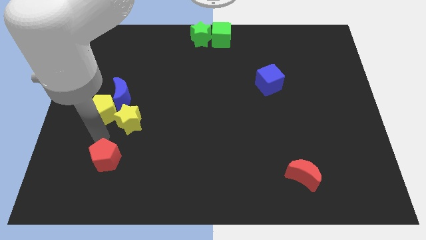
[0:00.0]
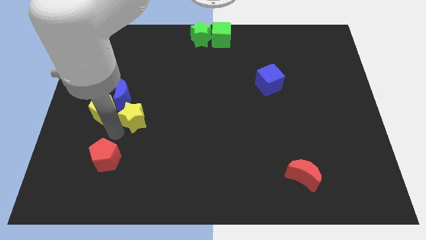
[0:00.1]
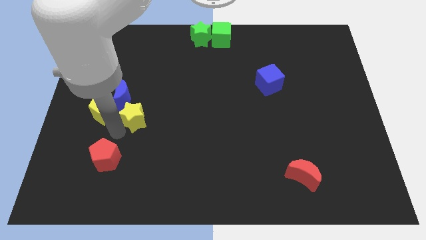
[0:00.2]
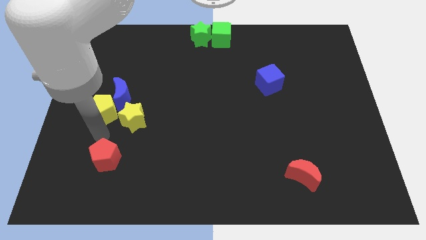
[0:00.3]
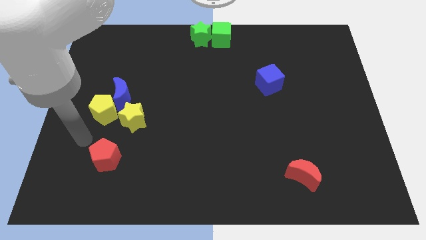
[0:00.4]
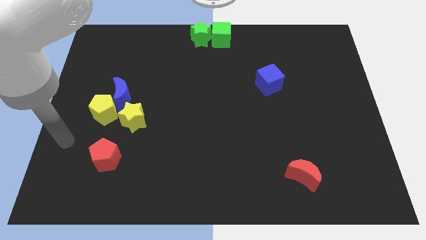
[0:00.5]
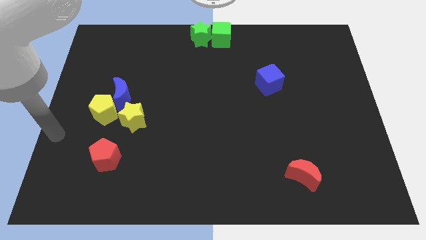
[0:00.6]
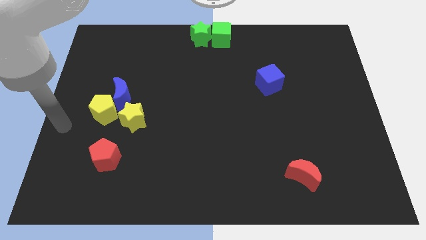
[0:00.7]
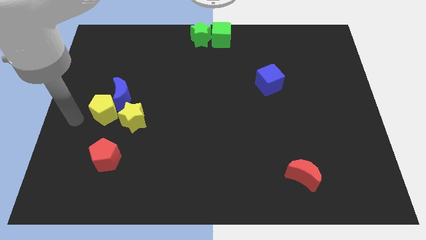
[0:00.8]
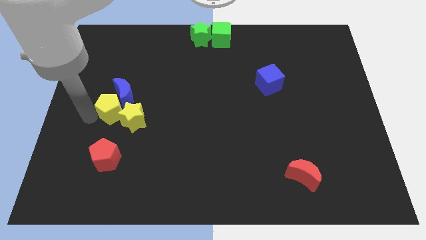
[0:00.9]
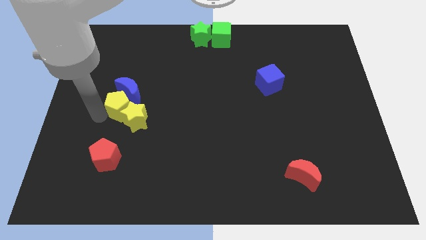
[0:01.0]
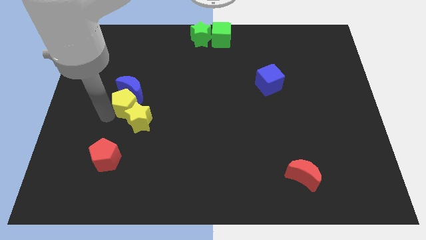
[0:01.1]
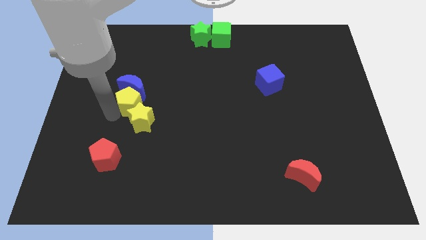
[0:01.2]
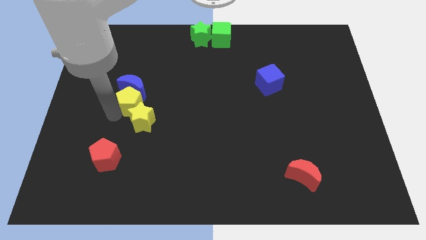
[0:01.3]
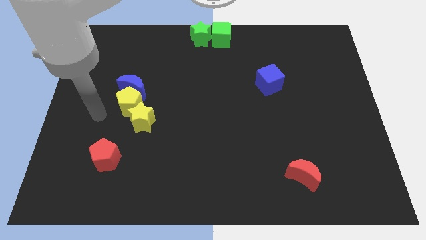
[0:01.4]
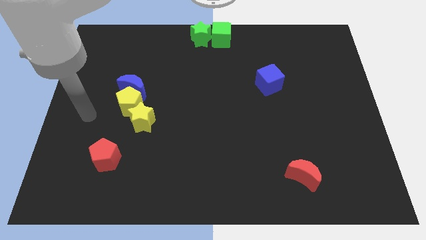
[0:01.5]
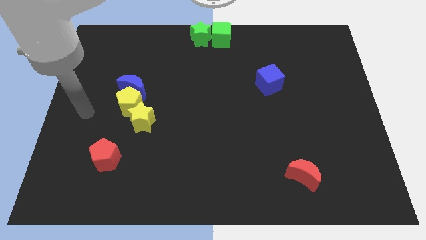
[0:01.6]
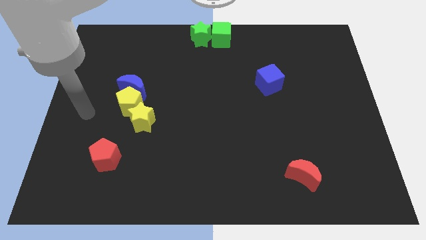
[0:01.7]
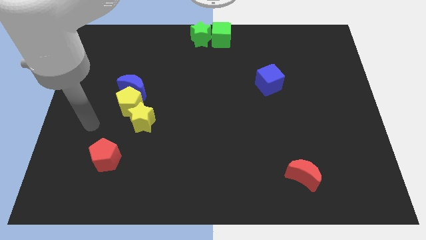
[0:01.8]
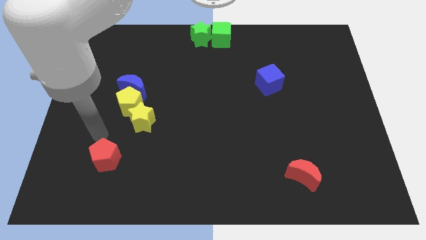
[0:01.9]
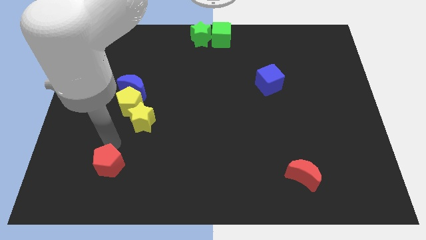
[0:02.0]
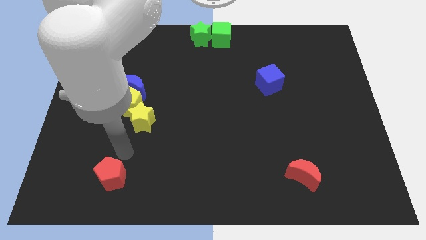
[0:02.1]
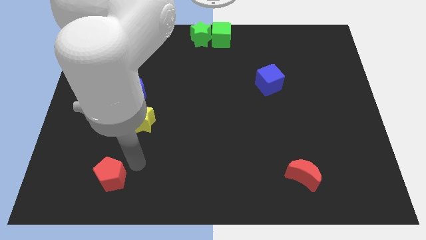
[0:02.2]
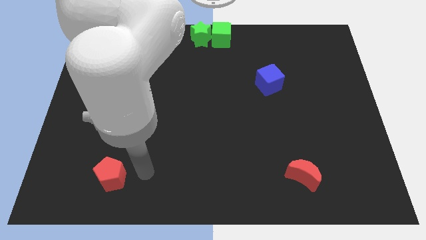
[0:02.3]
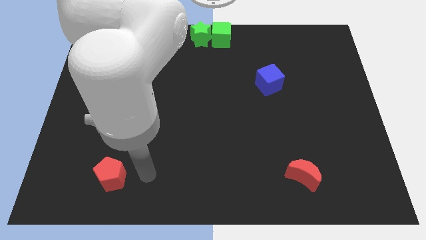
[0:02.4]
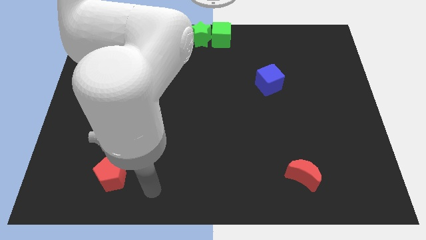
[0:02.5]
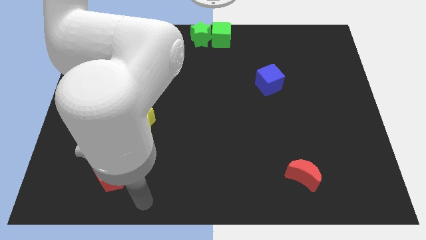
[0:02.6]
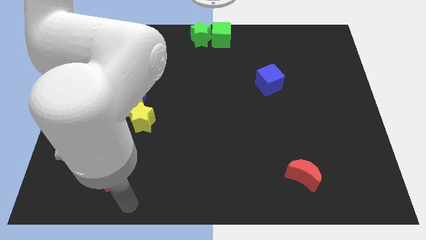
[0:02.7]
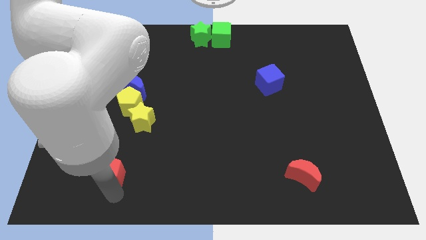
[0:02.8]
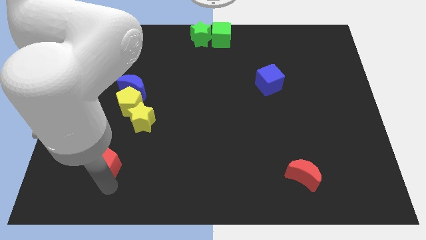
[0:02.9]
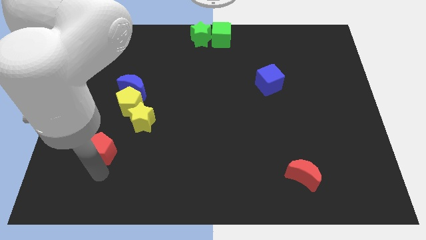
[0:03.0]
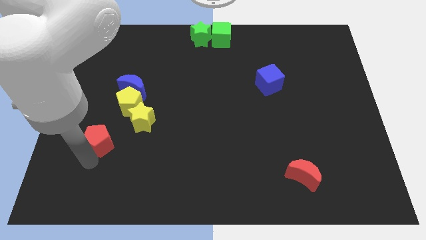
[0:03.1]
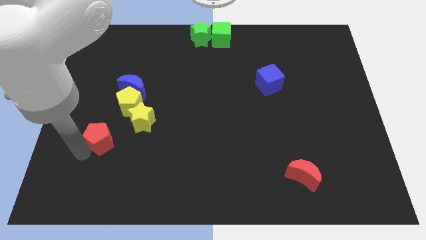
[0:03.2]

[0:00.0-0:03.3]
push the yellow pentagon into the blue moon and yellow star

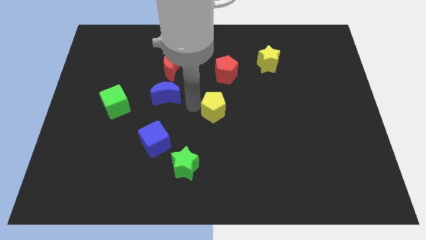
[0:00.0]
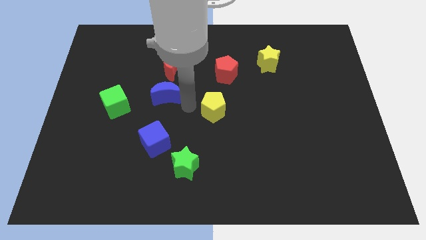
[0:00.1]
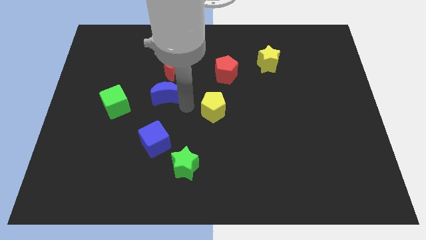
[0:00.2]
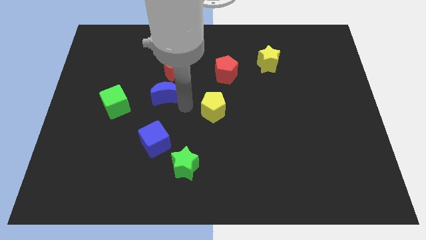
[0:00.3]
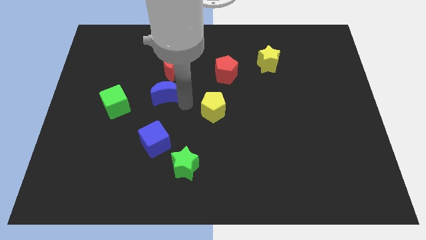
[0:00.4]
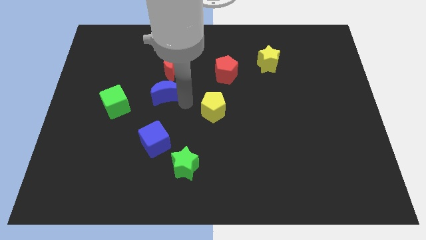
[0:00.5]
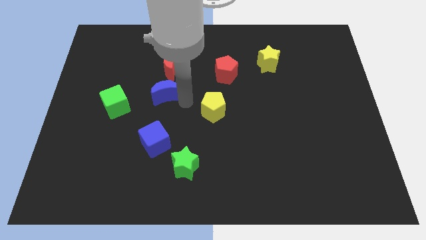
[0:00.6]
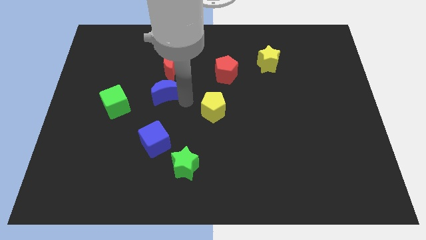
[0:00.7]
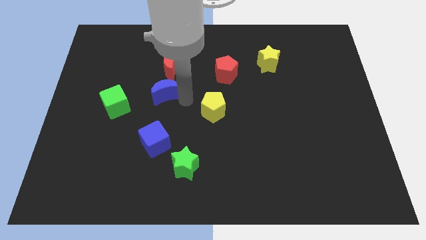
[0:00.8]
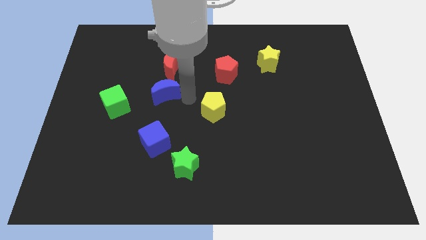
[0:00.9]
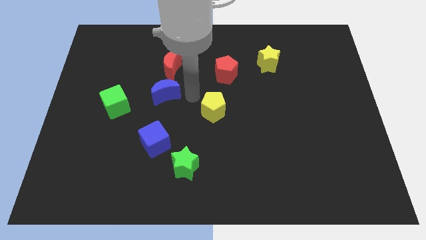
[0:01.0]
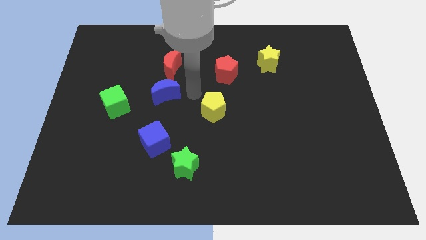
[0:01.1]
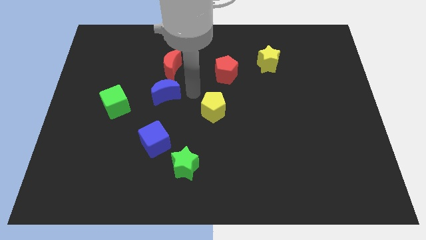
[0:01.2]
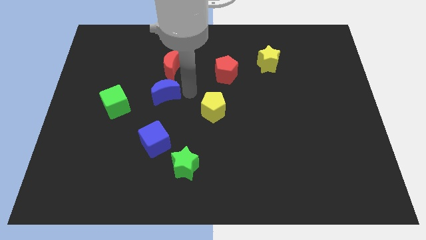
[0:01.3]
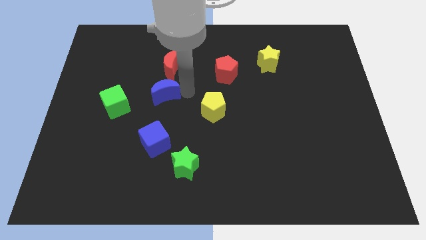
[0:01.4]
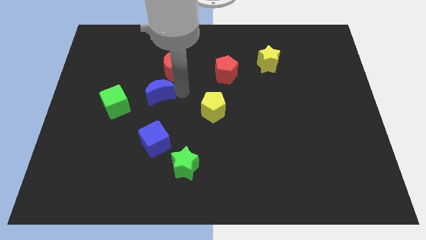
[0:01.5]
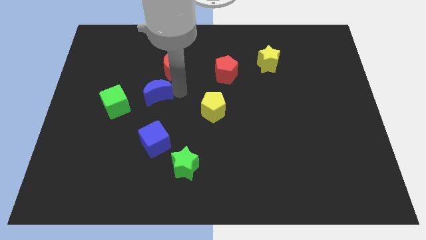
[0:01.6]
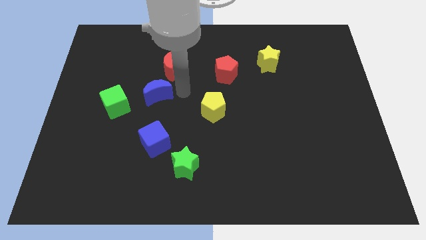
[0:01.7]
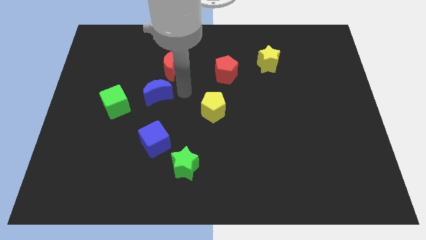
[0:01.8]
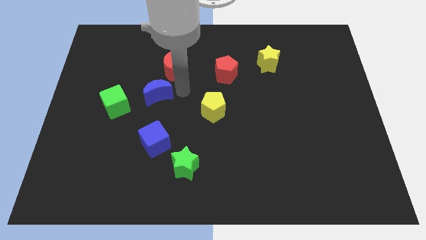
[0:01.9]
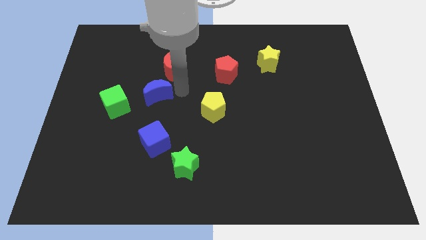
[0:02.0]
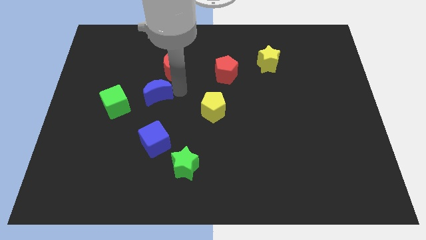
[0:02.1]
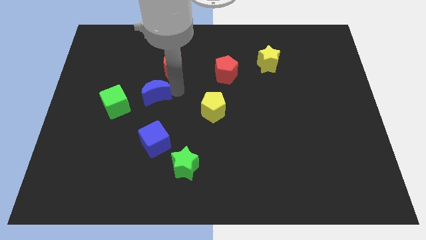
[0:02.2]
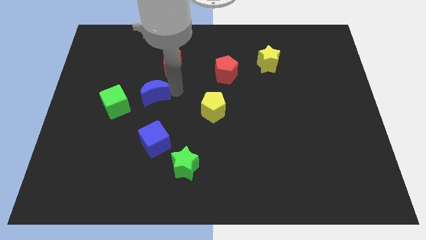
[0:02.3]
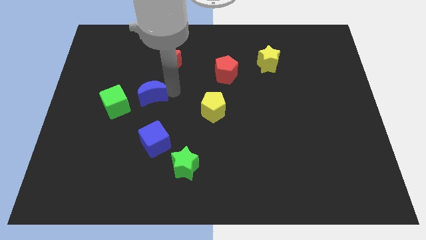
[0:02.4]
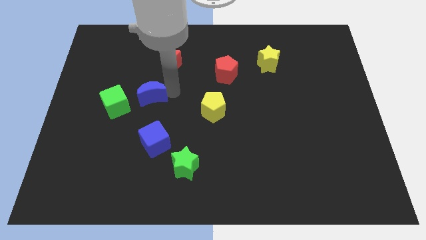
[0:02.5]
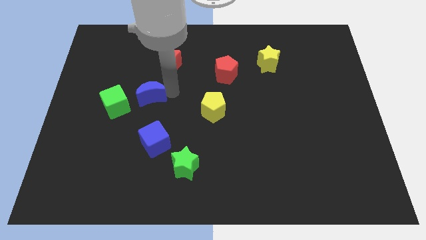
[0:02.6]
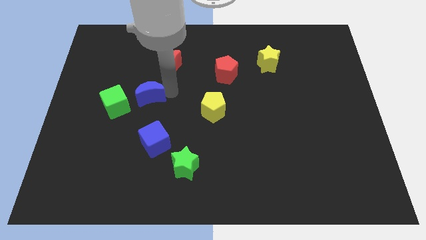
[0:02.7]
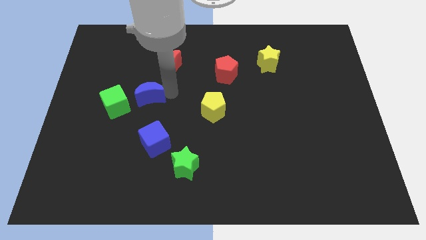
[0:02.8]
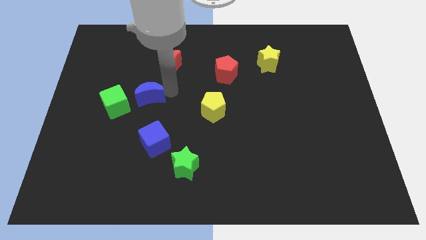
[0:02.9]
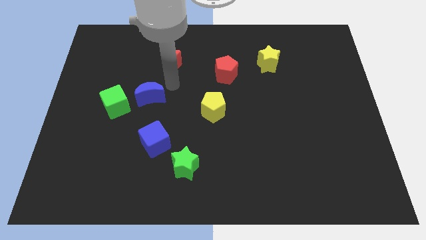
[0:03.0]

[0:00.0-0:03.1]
move the blue moon to the right of the green cube

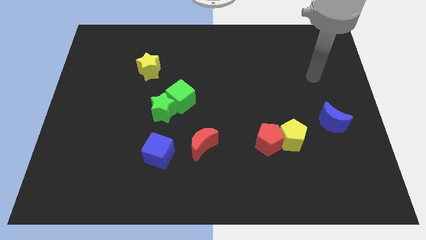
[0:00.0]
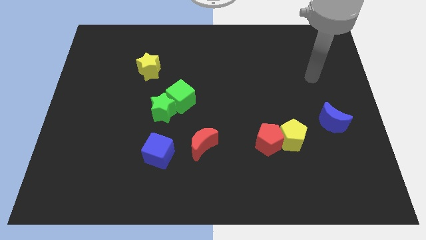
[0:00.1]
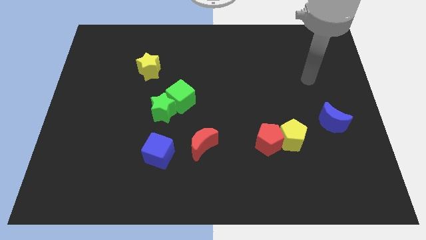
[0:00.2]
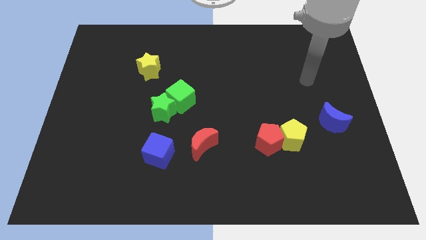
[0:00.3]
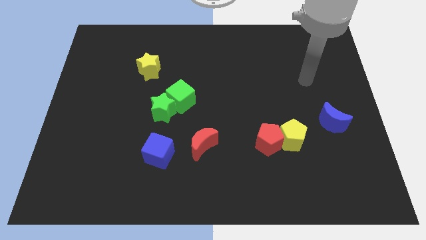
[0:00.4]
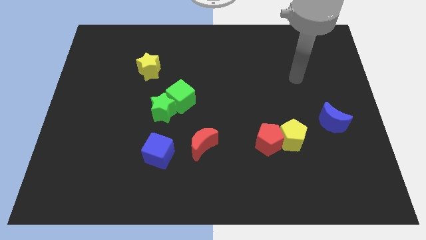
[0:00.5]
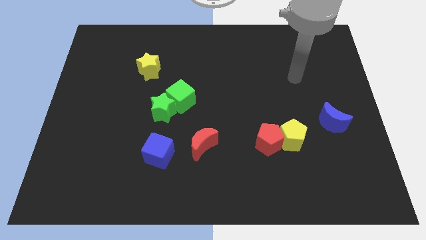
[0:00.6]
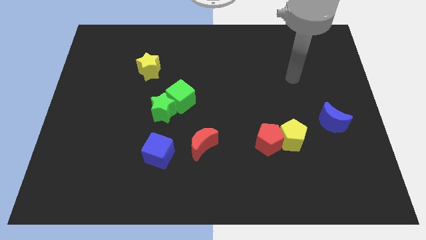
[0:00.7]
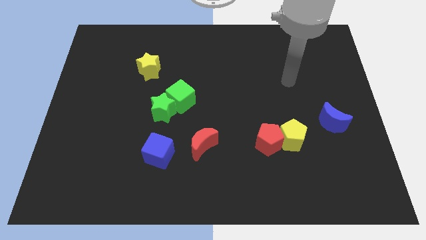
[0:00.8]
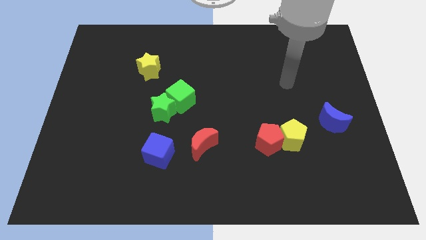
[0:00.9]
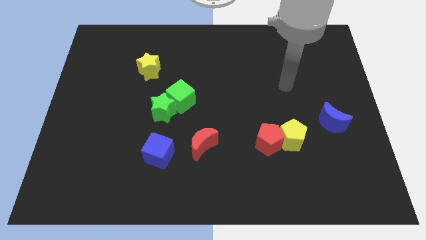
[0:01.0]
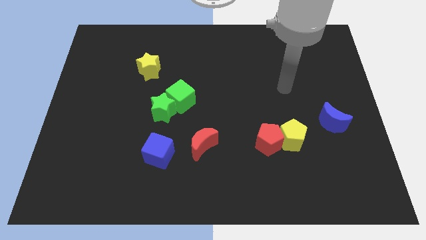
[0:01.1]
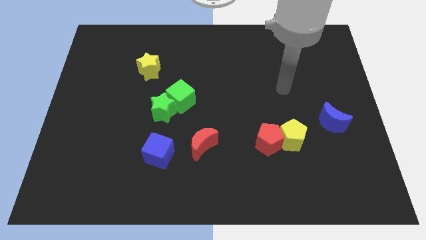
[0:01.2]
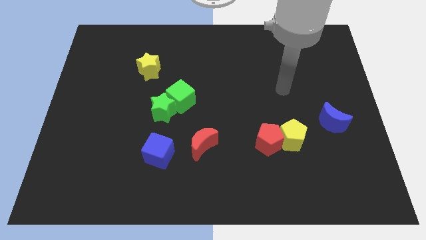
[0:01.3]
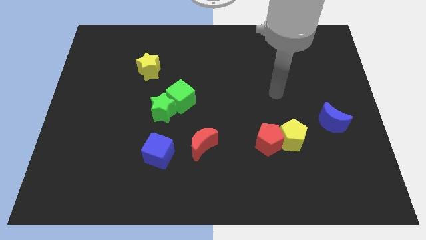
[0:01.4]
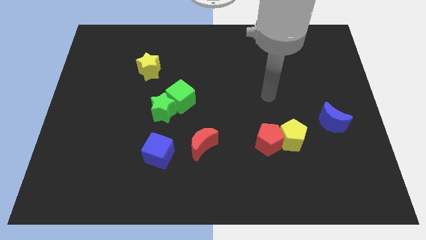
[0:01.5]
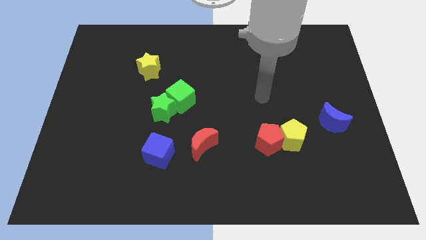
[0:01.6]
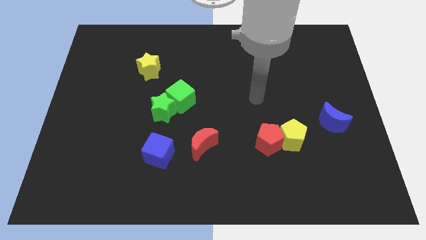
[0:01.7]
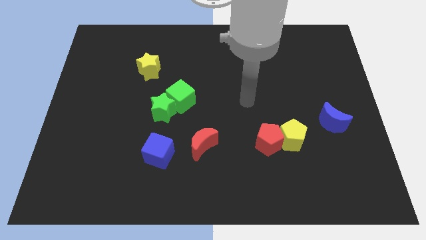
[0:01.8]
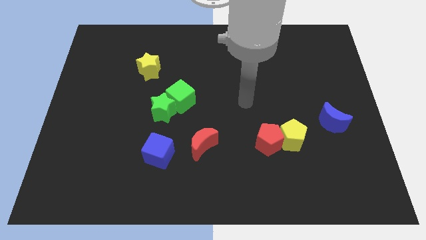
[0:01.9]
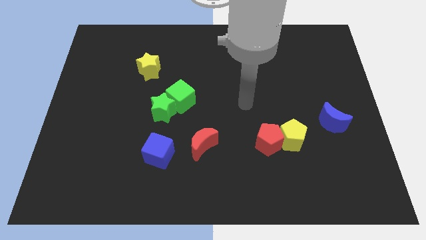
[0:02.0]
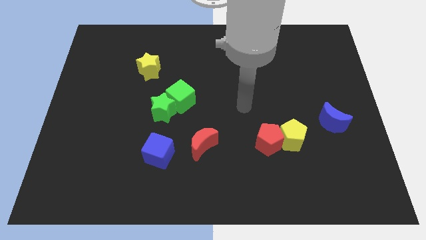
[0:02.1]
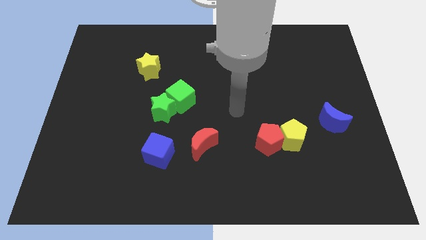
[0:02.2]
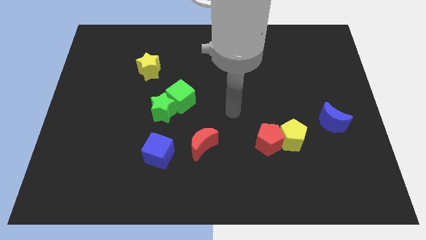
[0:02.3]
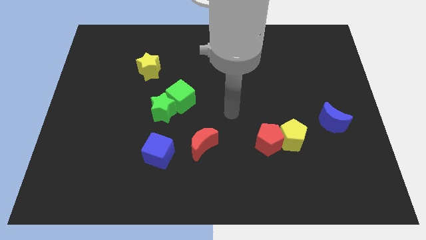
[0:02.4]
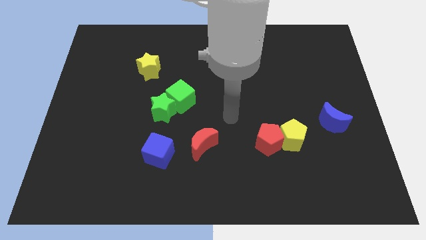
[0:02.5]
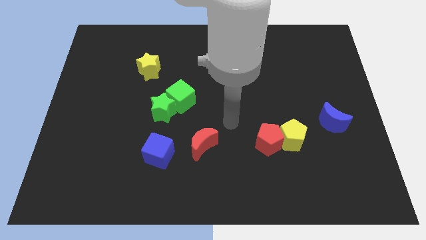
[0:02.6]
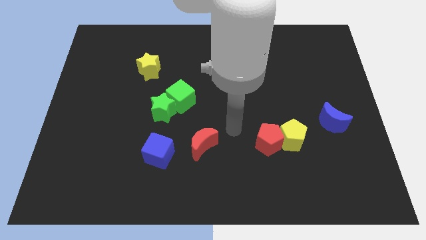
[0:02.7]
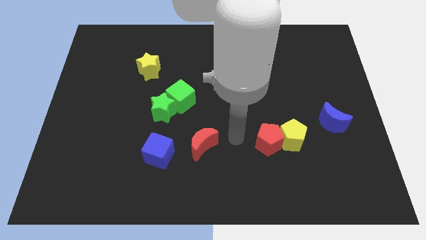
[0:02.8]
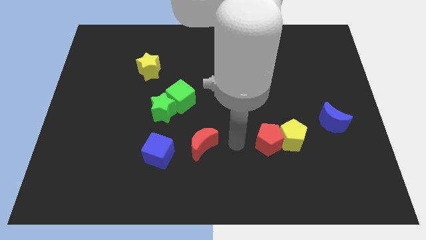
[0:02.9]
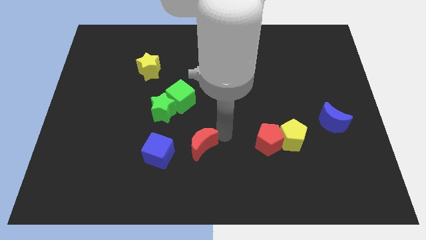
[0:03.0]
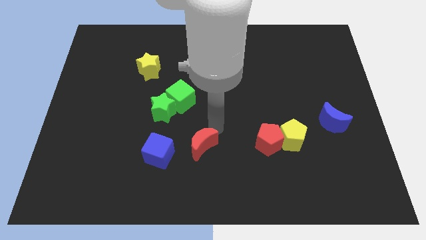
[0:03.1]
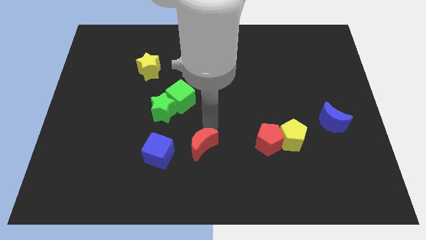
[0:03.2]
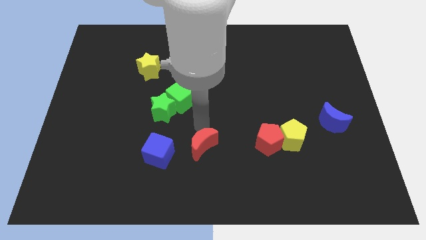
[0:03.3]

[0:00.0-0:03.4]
go to the top side of the red crescent
